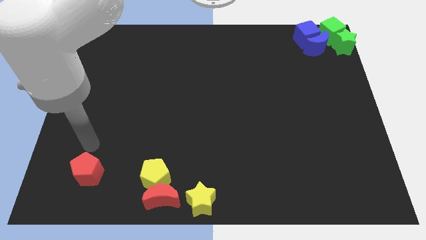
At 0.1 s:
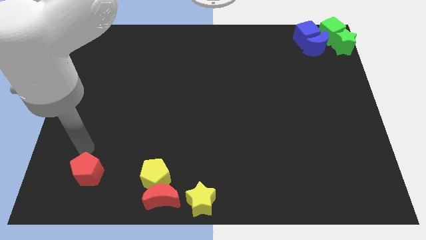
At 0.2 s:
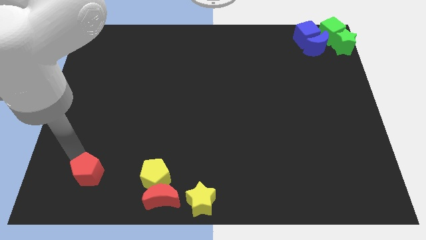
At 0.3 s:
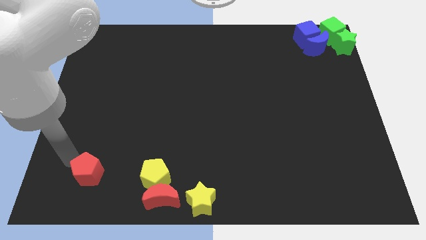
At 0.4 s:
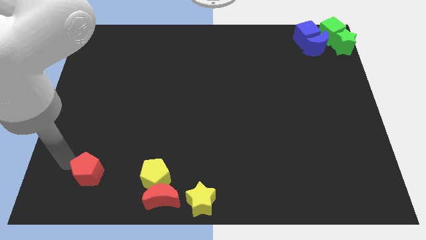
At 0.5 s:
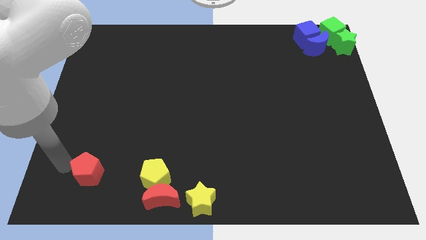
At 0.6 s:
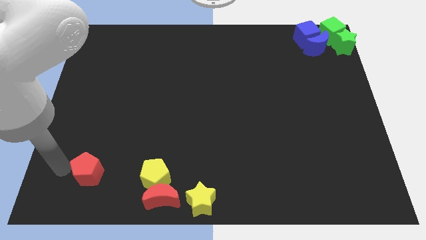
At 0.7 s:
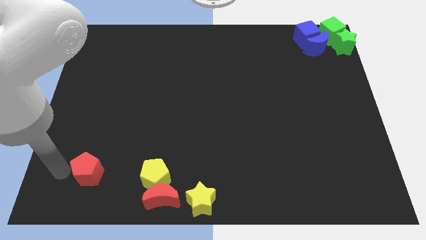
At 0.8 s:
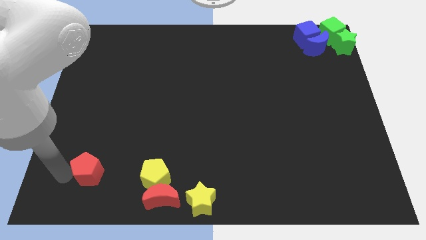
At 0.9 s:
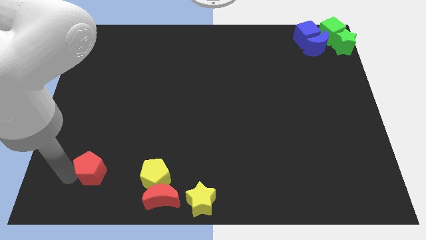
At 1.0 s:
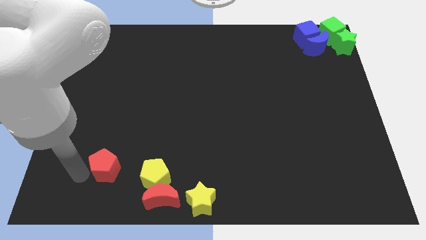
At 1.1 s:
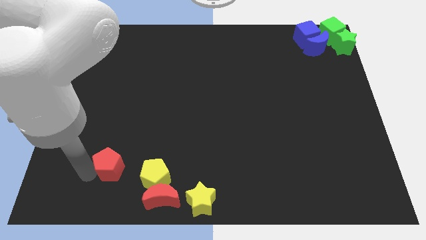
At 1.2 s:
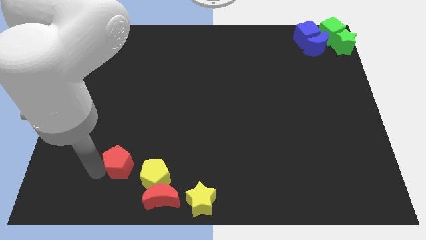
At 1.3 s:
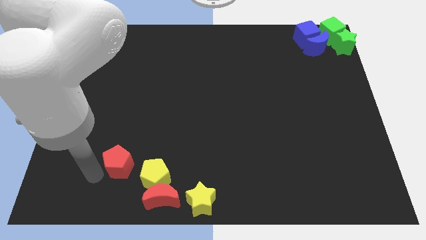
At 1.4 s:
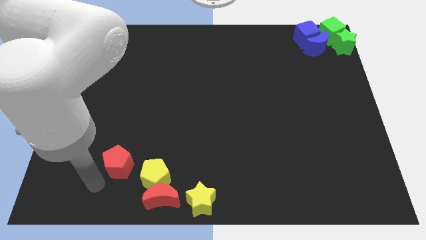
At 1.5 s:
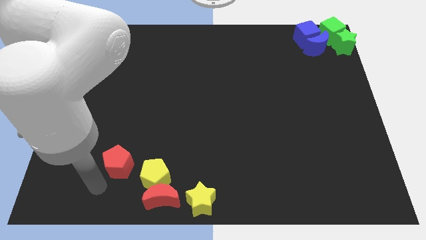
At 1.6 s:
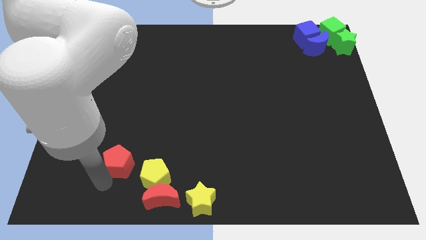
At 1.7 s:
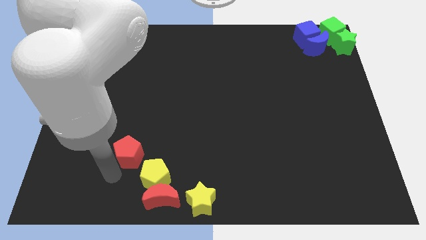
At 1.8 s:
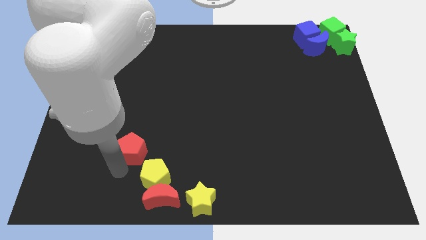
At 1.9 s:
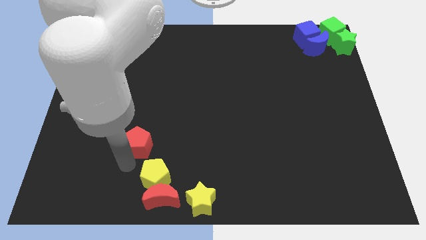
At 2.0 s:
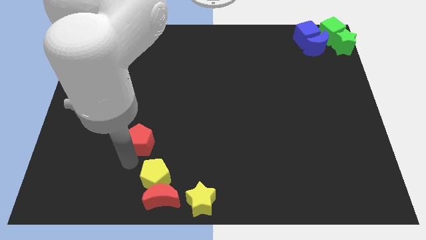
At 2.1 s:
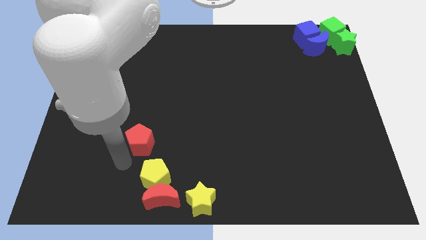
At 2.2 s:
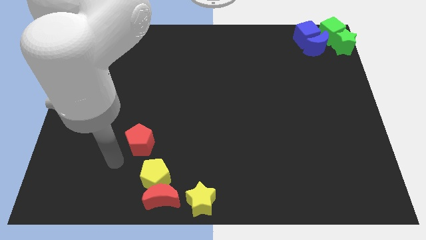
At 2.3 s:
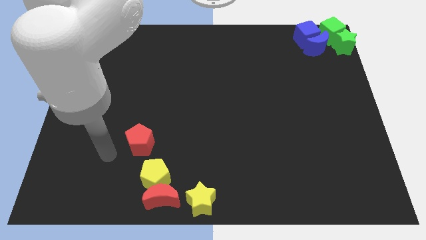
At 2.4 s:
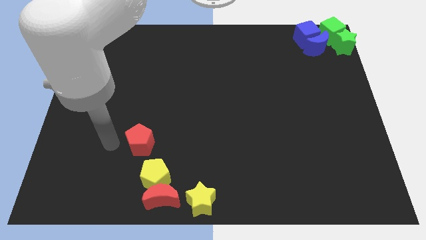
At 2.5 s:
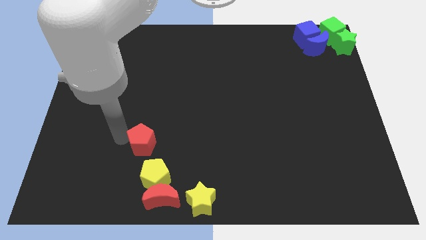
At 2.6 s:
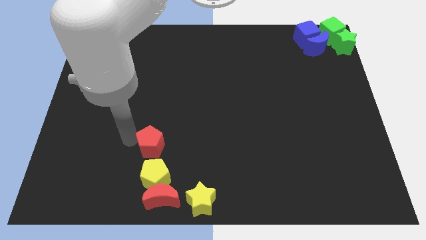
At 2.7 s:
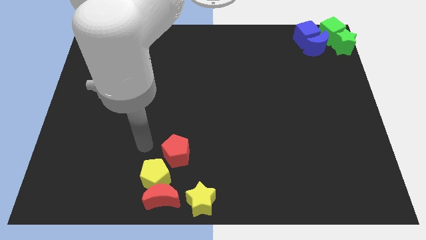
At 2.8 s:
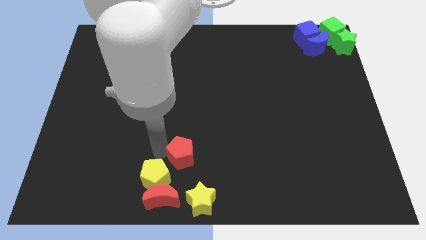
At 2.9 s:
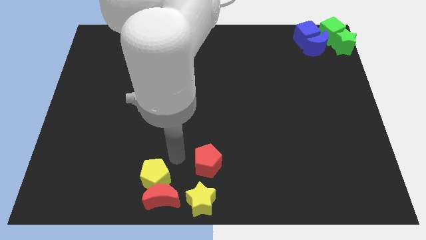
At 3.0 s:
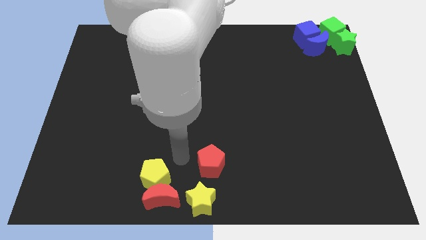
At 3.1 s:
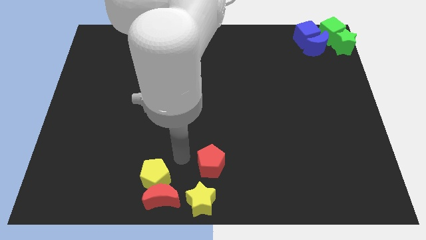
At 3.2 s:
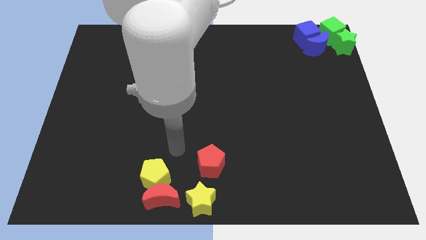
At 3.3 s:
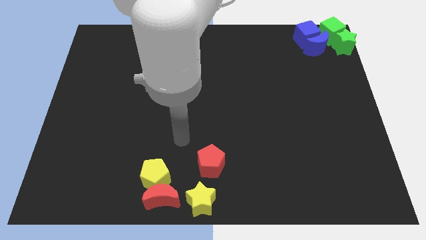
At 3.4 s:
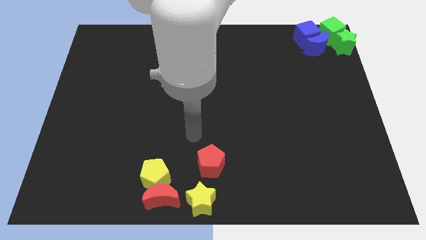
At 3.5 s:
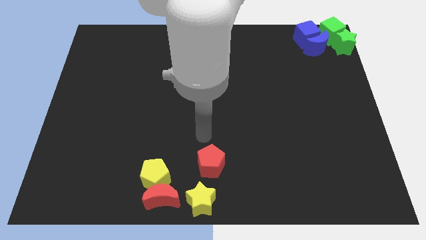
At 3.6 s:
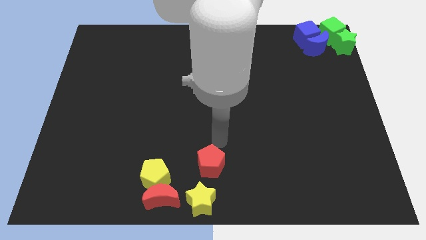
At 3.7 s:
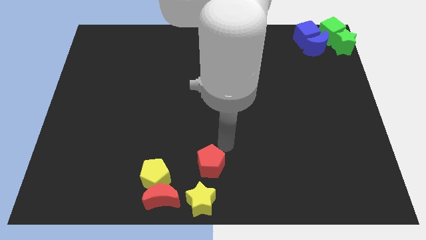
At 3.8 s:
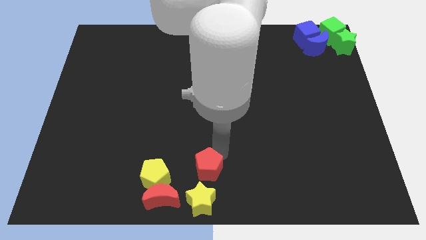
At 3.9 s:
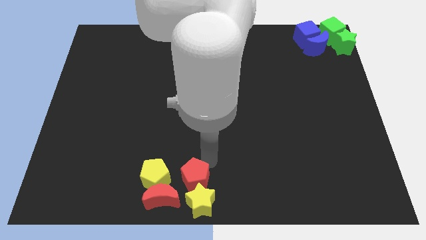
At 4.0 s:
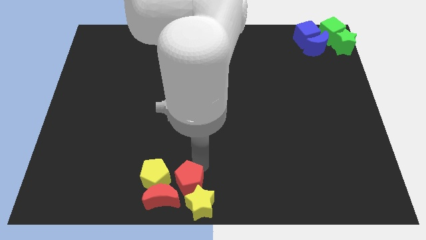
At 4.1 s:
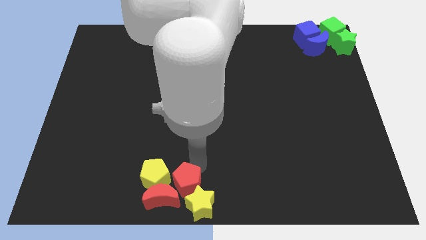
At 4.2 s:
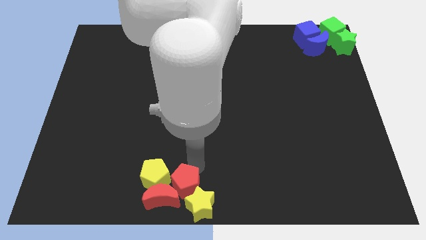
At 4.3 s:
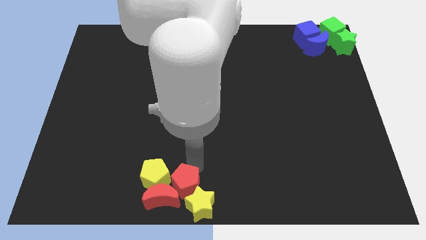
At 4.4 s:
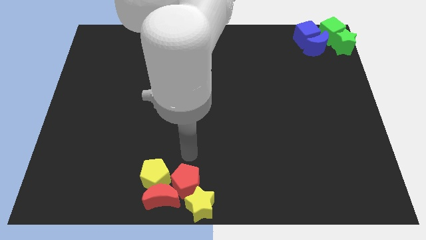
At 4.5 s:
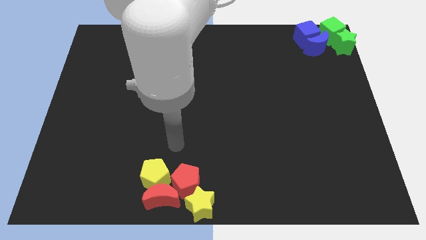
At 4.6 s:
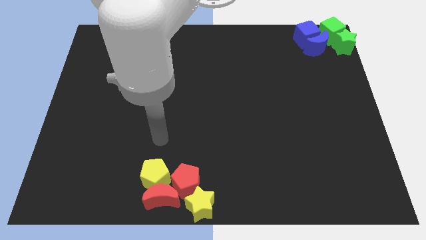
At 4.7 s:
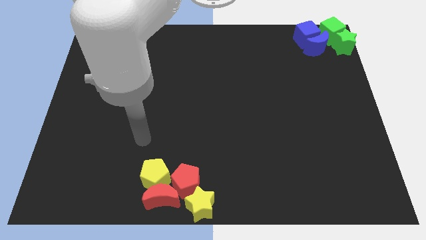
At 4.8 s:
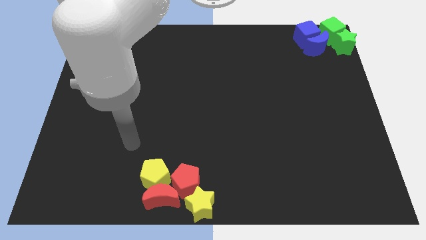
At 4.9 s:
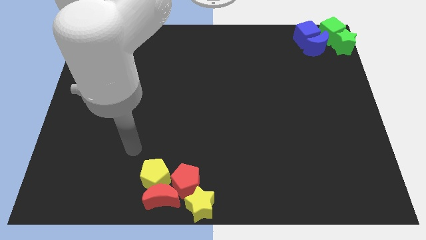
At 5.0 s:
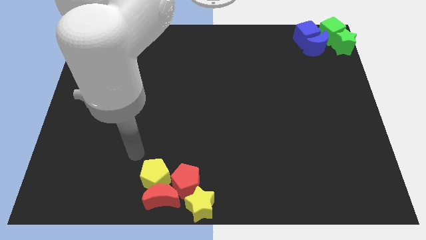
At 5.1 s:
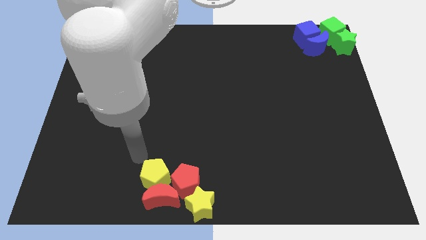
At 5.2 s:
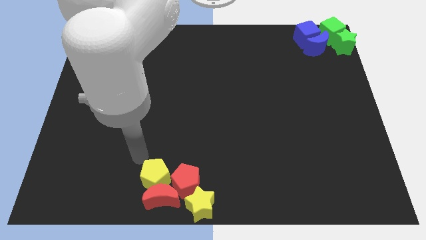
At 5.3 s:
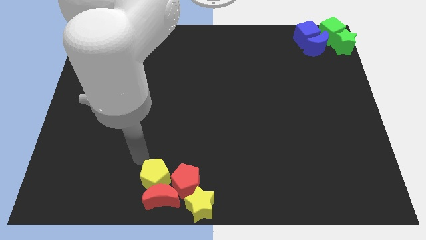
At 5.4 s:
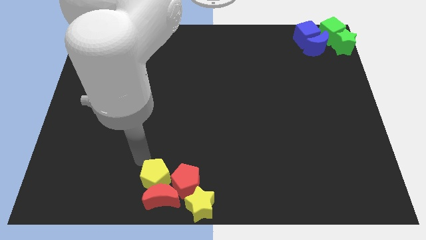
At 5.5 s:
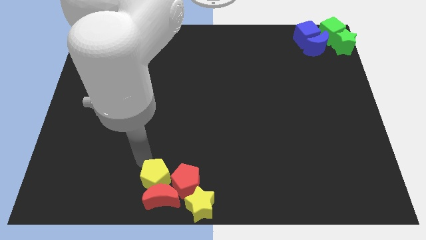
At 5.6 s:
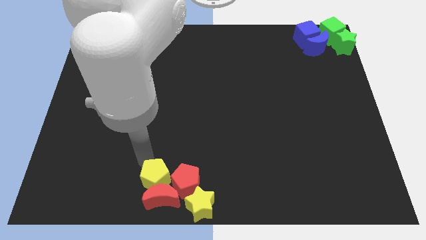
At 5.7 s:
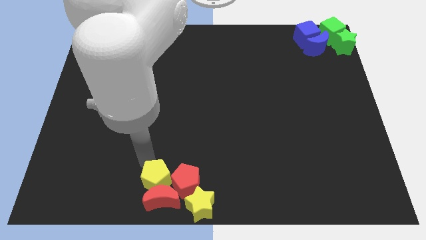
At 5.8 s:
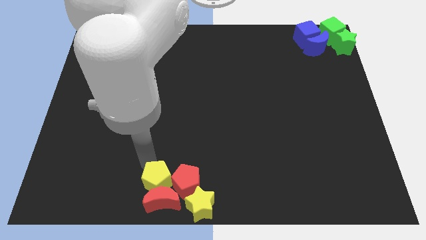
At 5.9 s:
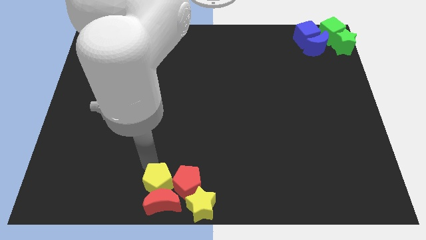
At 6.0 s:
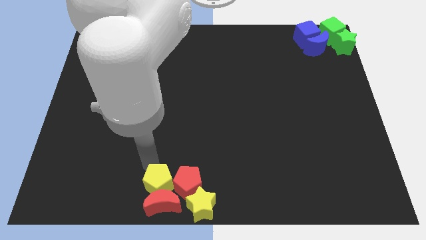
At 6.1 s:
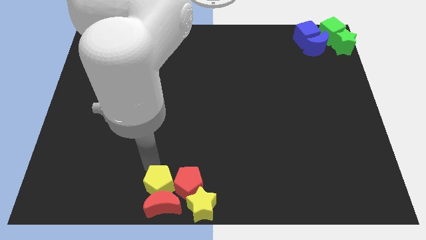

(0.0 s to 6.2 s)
move the red pentagon into the two yellow blocks

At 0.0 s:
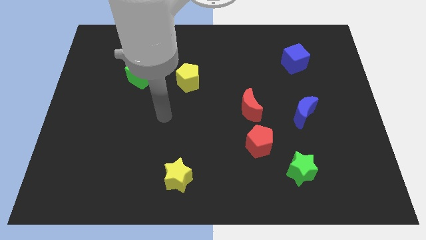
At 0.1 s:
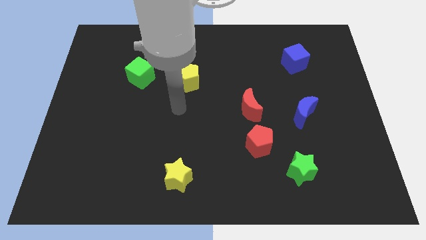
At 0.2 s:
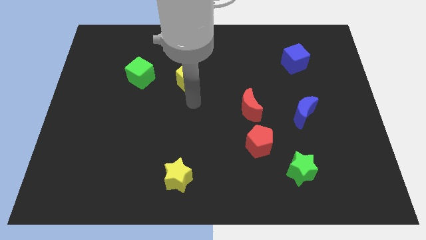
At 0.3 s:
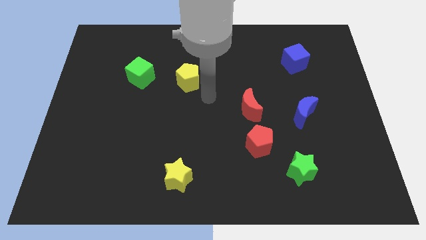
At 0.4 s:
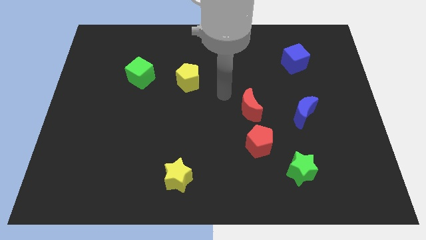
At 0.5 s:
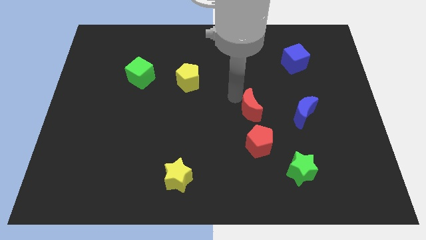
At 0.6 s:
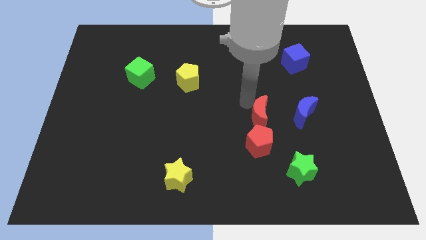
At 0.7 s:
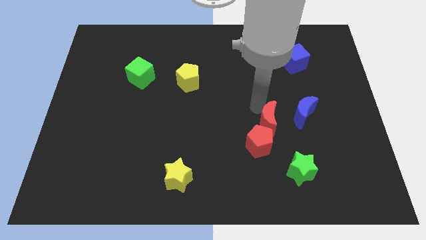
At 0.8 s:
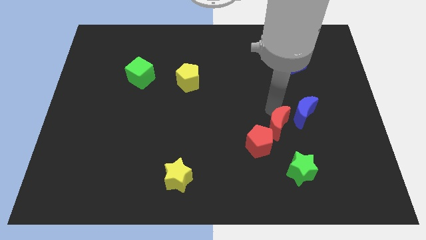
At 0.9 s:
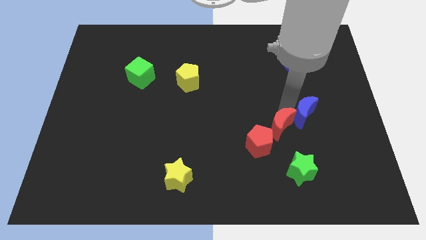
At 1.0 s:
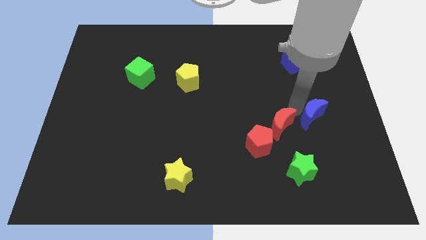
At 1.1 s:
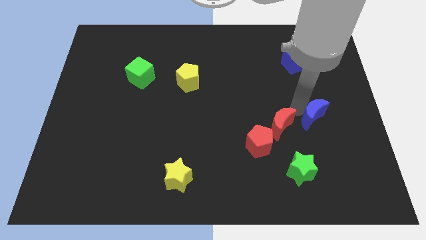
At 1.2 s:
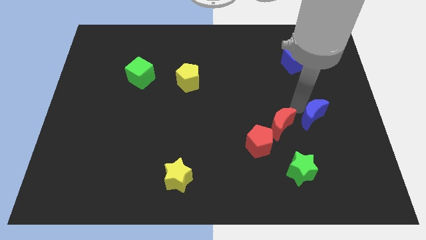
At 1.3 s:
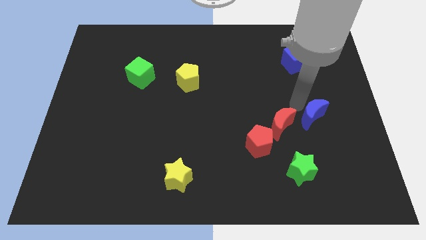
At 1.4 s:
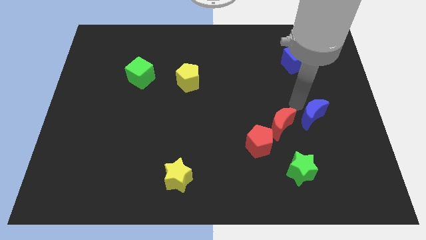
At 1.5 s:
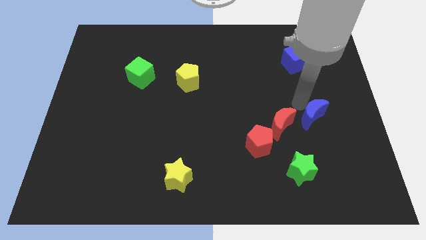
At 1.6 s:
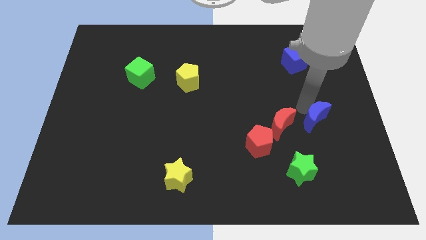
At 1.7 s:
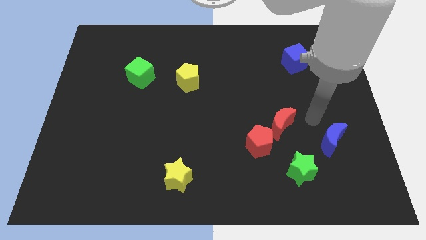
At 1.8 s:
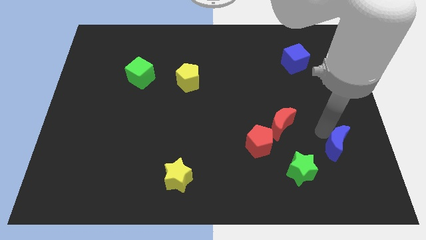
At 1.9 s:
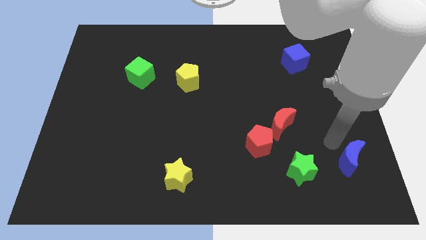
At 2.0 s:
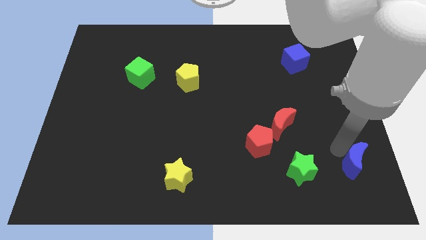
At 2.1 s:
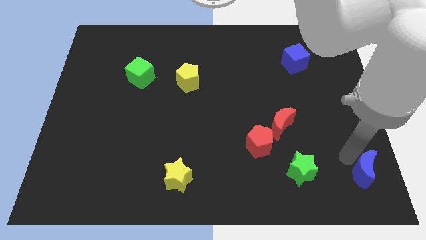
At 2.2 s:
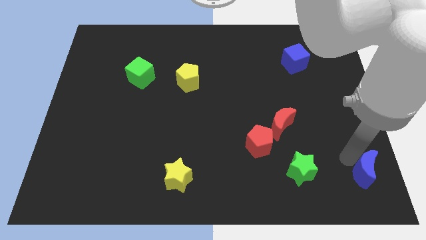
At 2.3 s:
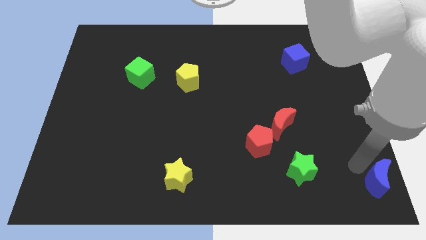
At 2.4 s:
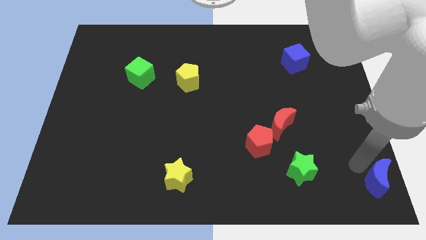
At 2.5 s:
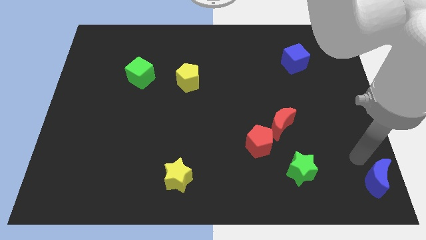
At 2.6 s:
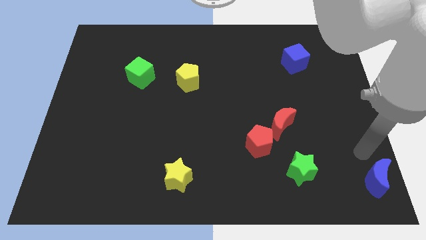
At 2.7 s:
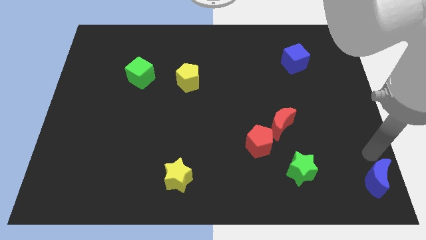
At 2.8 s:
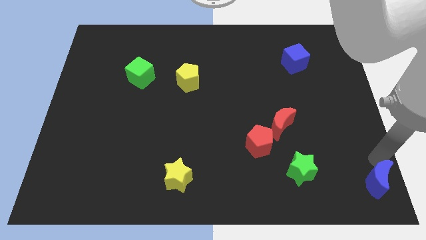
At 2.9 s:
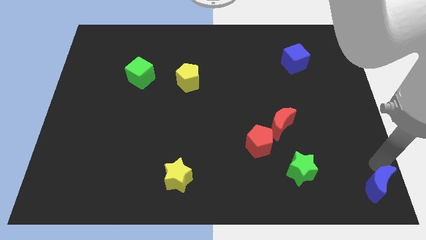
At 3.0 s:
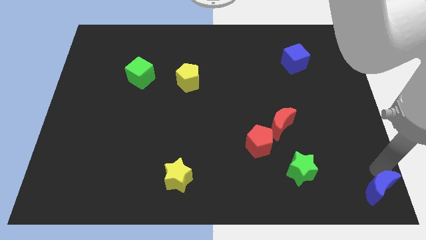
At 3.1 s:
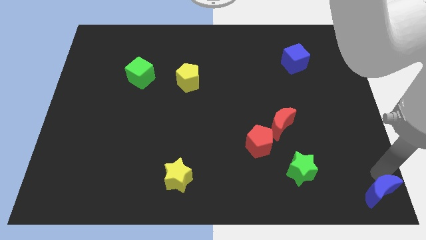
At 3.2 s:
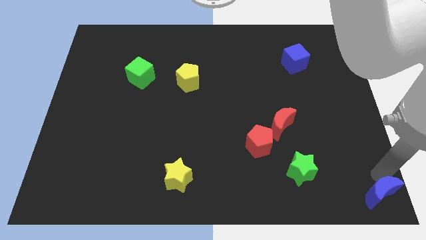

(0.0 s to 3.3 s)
place the blue moon at the bottom right corner of the board
